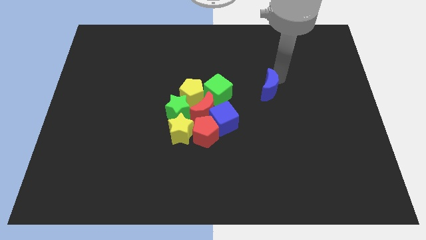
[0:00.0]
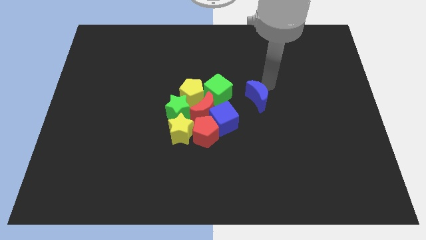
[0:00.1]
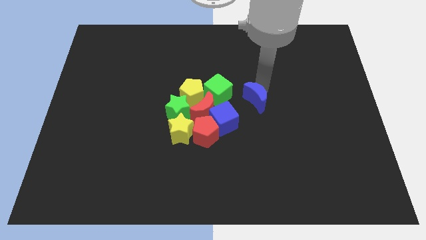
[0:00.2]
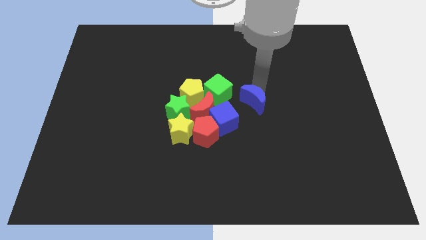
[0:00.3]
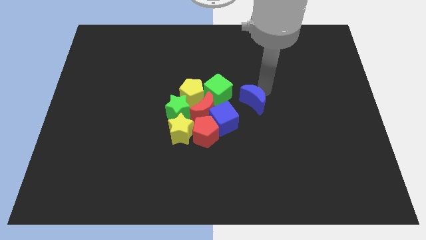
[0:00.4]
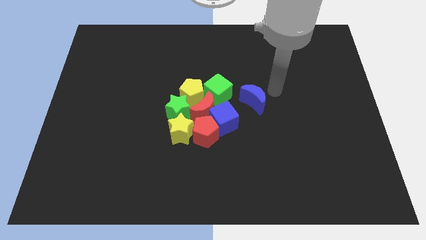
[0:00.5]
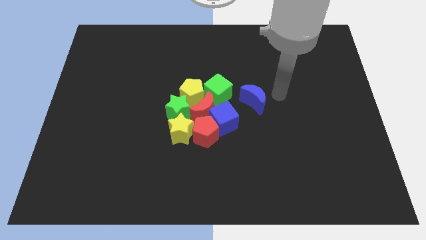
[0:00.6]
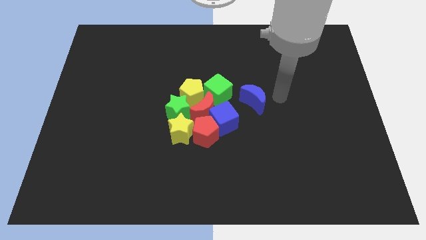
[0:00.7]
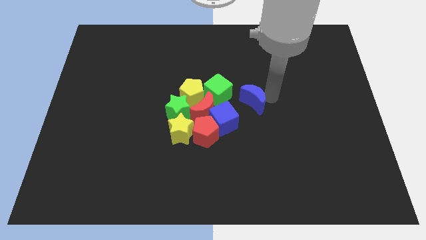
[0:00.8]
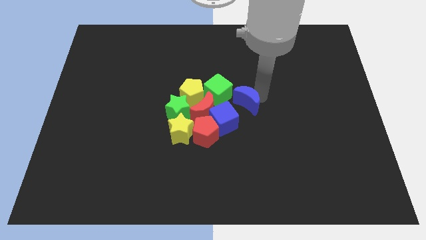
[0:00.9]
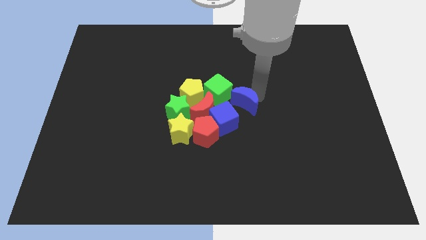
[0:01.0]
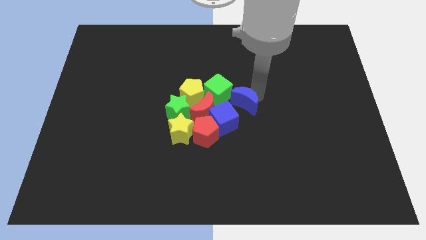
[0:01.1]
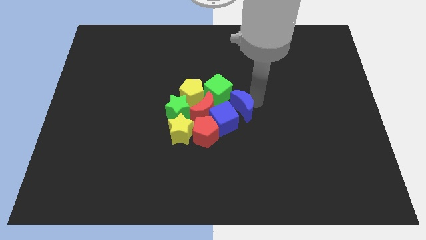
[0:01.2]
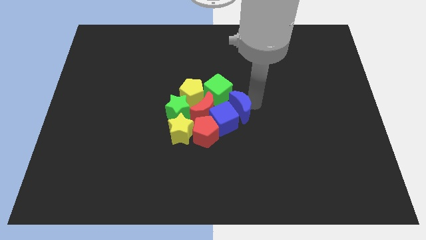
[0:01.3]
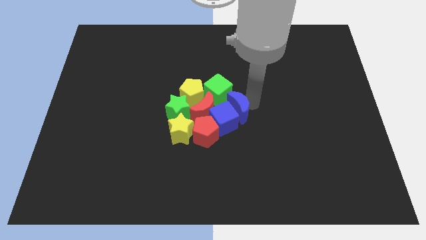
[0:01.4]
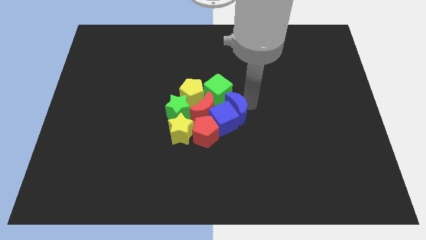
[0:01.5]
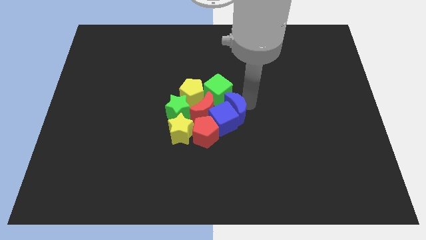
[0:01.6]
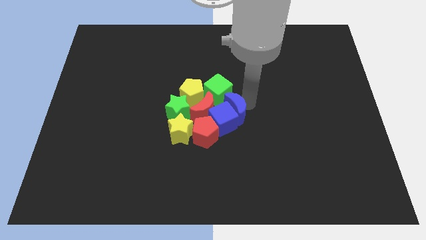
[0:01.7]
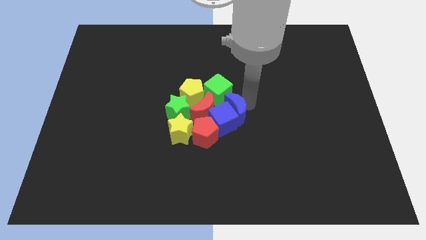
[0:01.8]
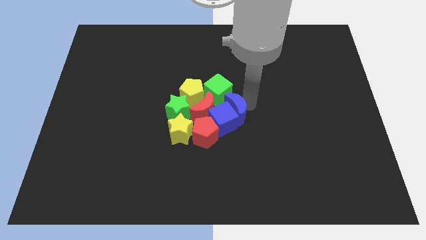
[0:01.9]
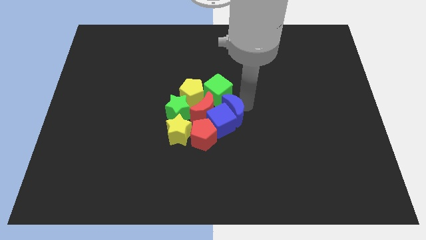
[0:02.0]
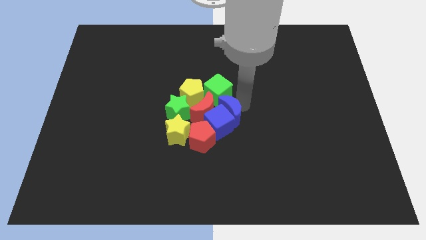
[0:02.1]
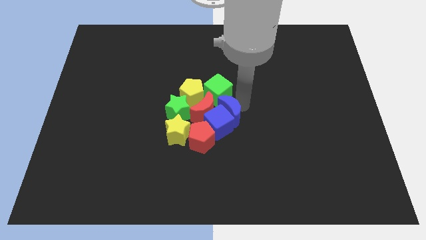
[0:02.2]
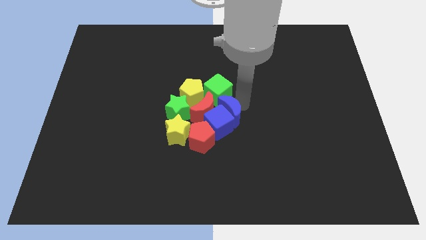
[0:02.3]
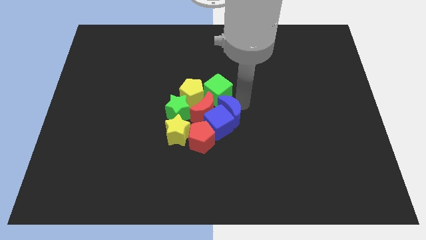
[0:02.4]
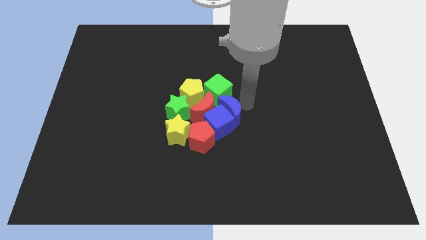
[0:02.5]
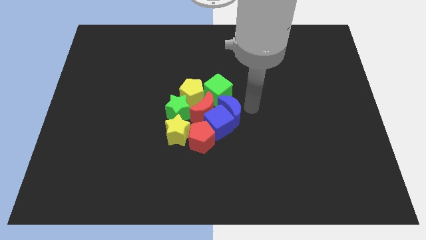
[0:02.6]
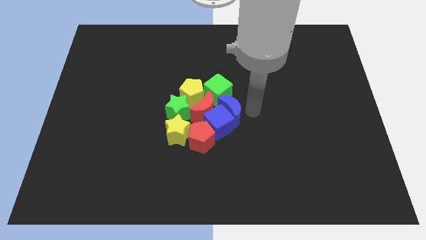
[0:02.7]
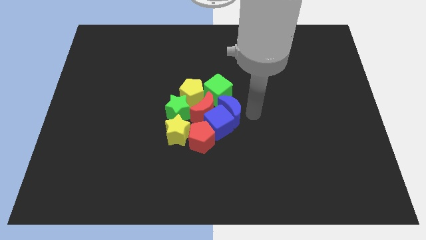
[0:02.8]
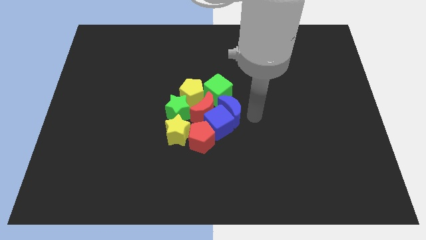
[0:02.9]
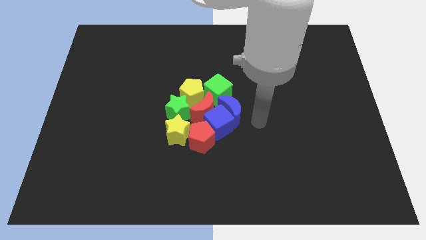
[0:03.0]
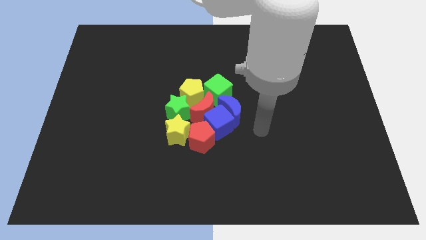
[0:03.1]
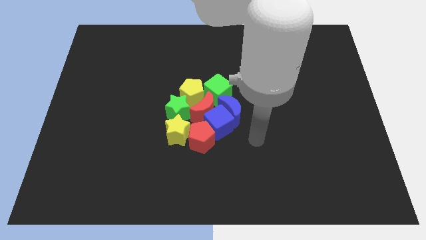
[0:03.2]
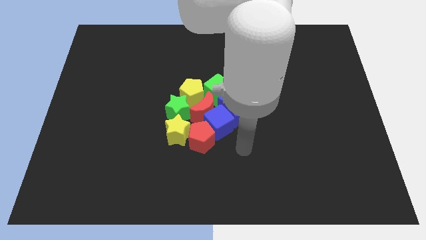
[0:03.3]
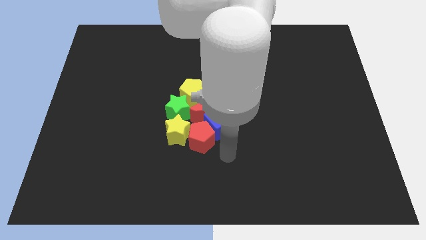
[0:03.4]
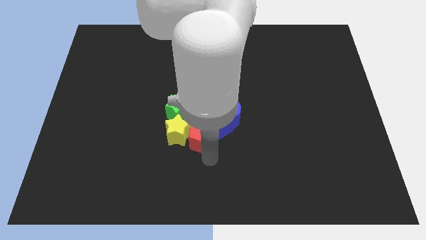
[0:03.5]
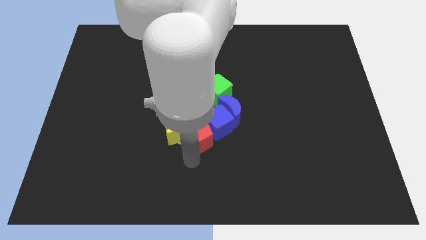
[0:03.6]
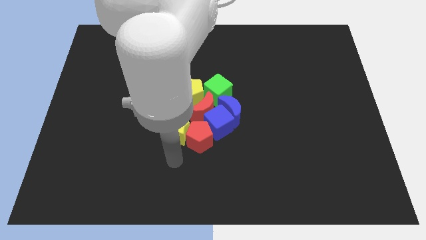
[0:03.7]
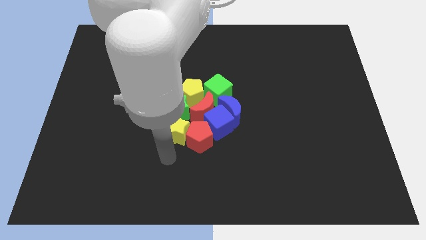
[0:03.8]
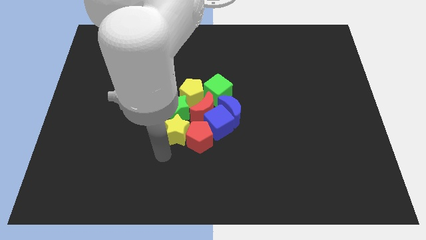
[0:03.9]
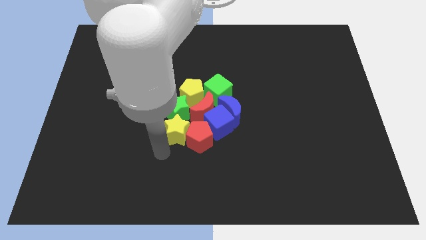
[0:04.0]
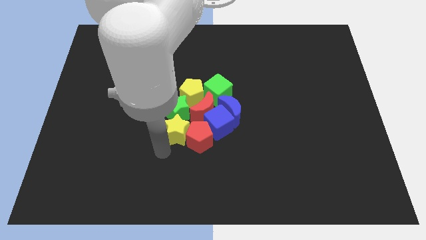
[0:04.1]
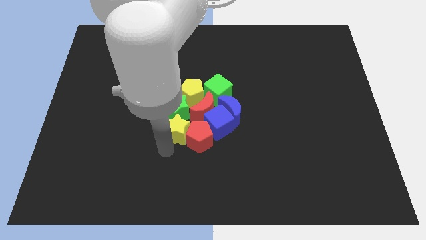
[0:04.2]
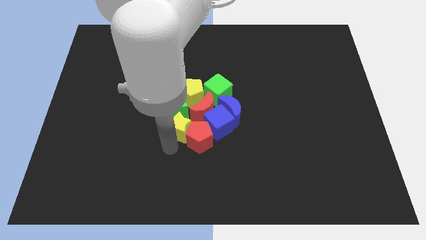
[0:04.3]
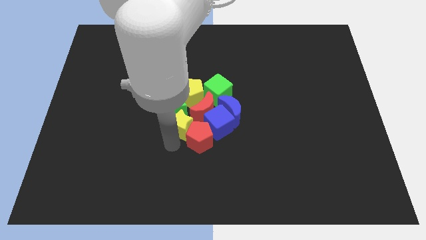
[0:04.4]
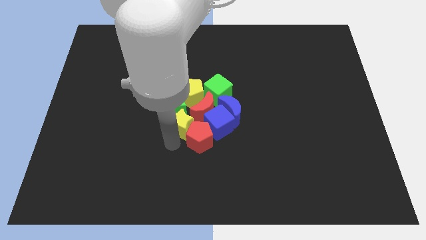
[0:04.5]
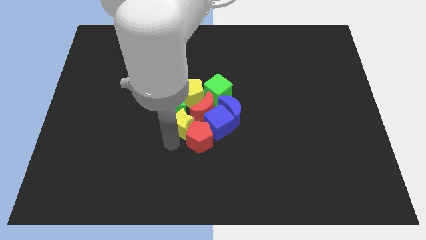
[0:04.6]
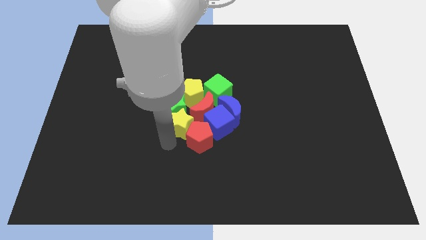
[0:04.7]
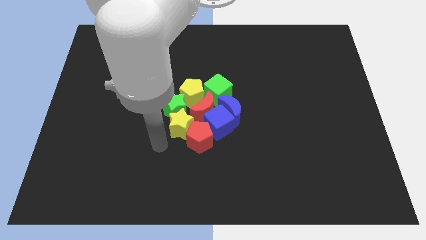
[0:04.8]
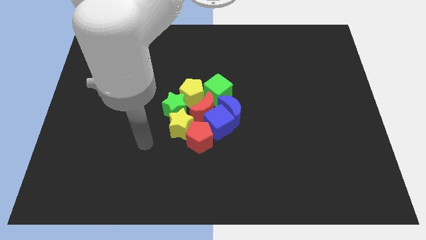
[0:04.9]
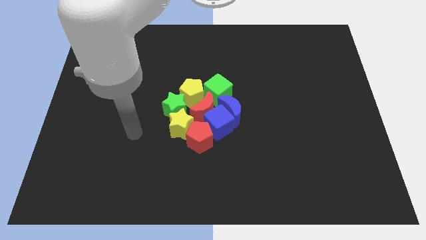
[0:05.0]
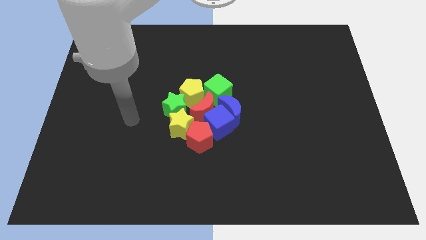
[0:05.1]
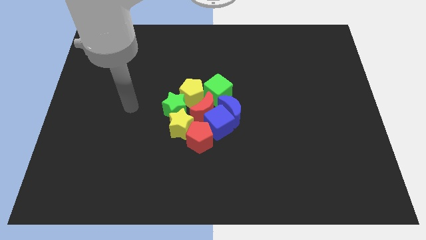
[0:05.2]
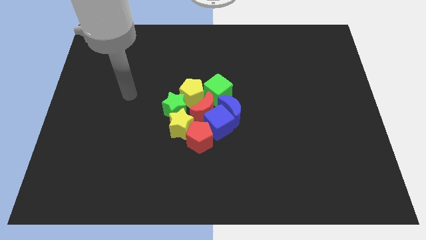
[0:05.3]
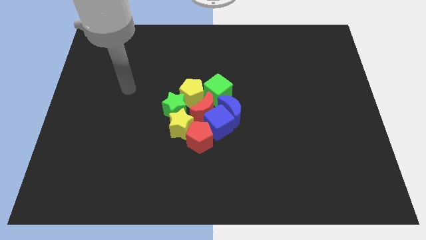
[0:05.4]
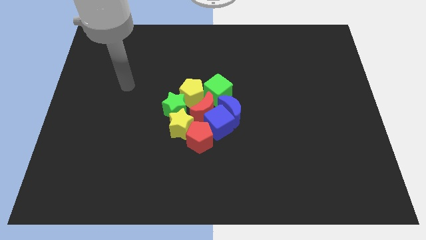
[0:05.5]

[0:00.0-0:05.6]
move blue moon into the circle of blocks

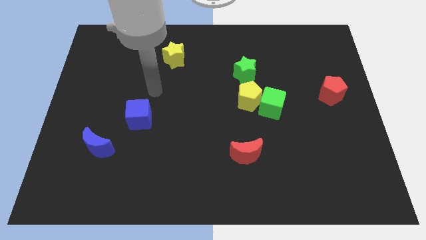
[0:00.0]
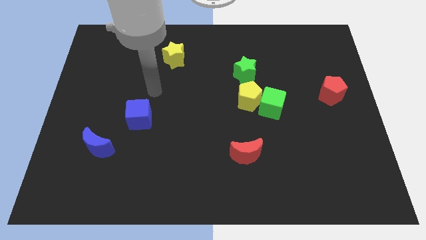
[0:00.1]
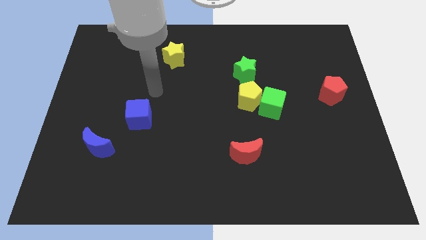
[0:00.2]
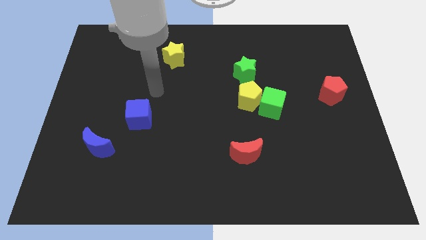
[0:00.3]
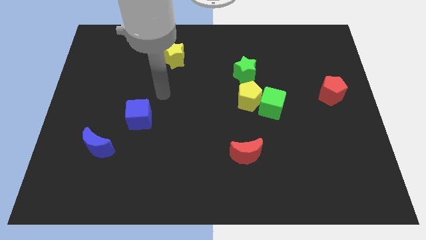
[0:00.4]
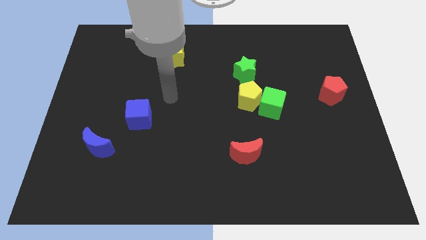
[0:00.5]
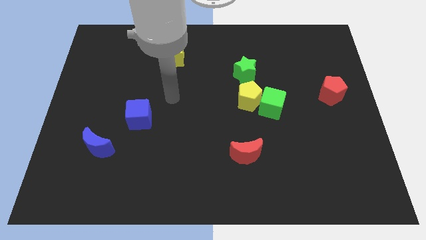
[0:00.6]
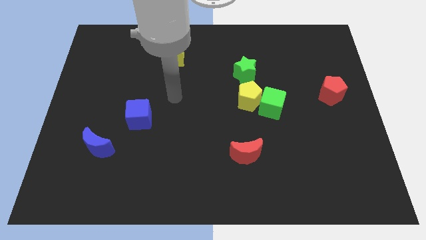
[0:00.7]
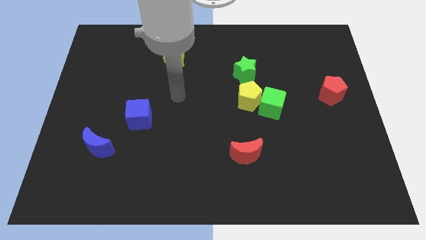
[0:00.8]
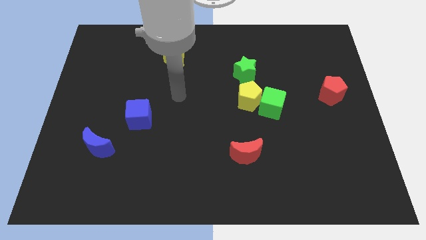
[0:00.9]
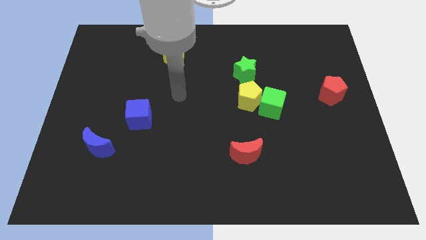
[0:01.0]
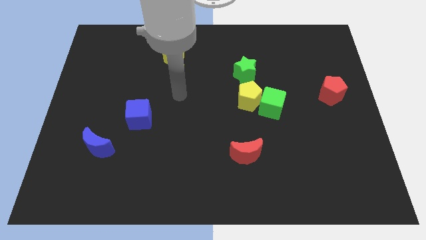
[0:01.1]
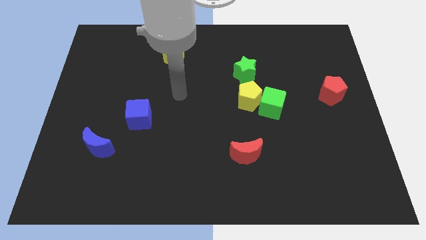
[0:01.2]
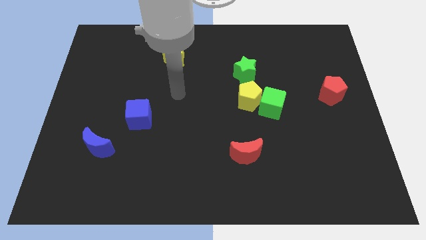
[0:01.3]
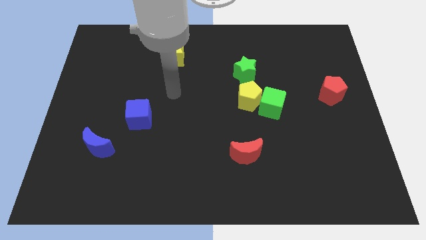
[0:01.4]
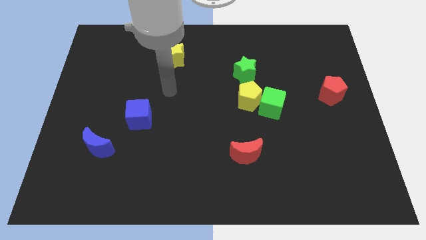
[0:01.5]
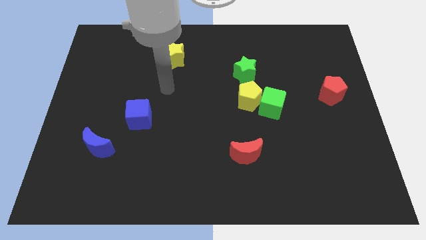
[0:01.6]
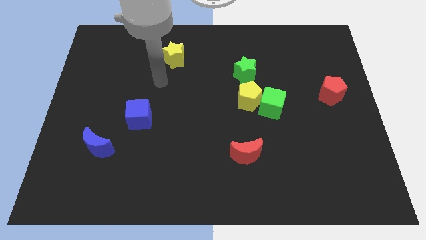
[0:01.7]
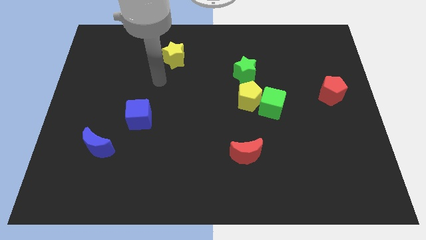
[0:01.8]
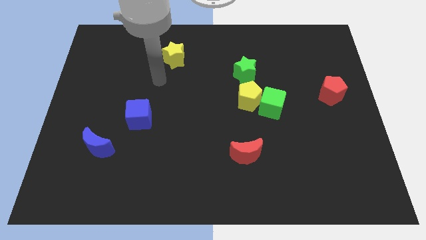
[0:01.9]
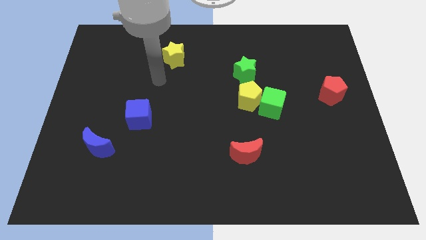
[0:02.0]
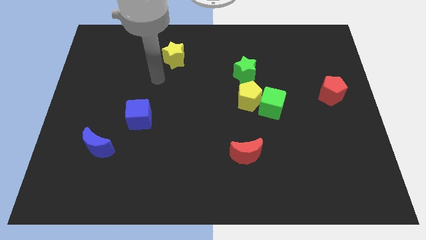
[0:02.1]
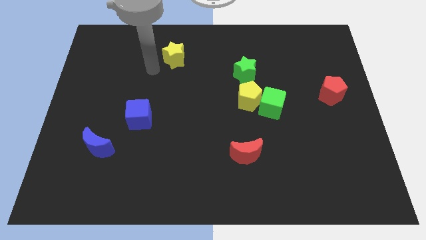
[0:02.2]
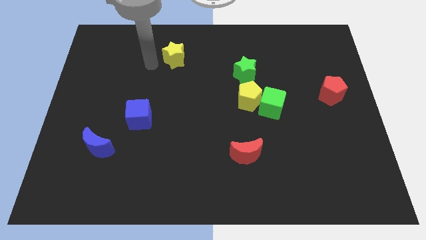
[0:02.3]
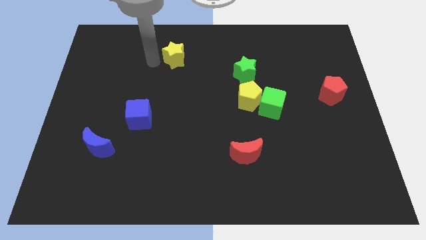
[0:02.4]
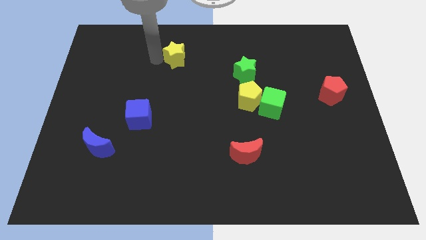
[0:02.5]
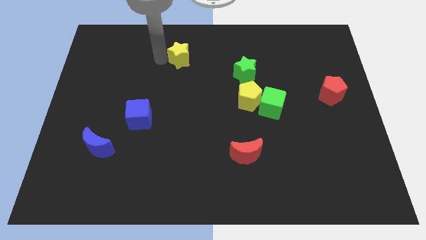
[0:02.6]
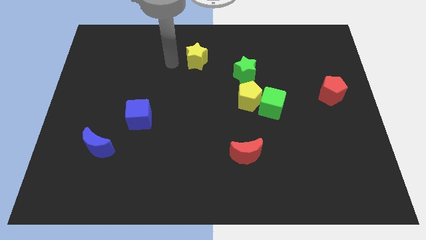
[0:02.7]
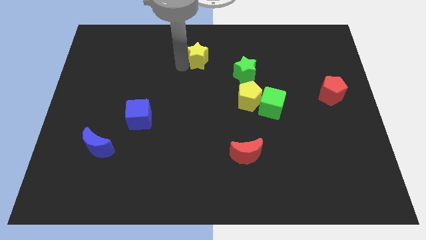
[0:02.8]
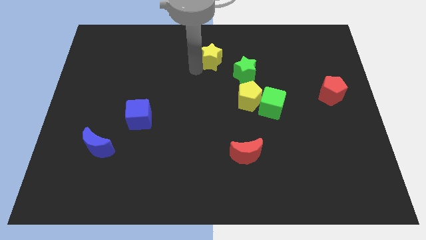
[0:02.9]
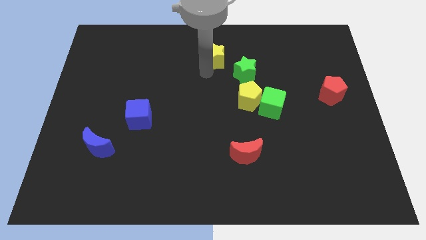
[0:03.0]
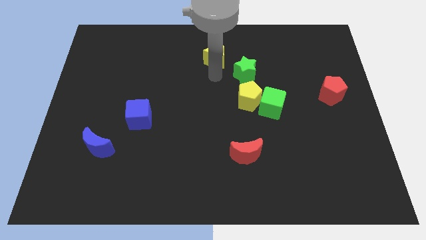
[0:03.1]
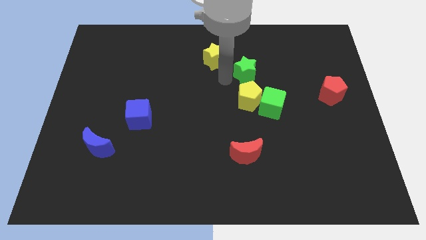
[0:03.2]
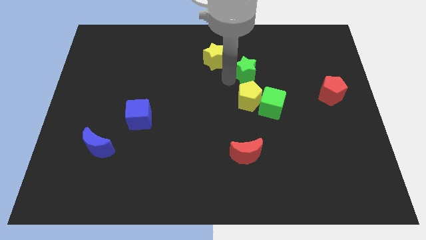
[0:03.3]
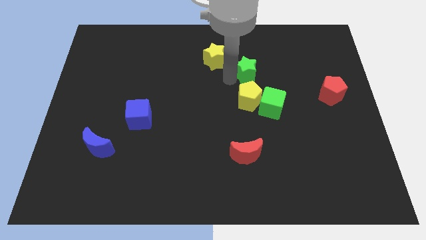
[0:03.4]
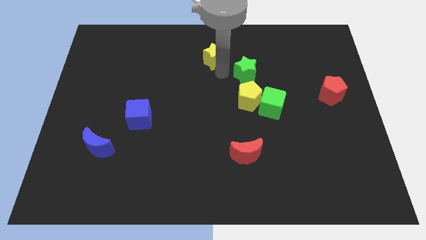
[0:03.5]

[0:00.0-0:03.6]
push the yellow star towards the green star
